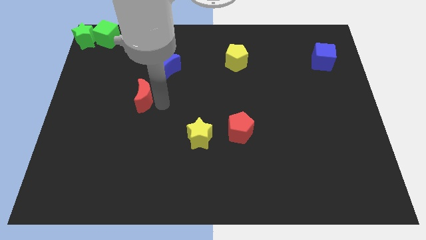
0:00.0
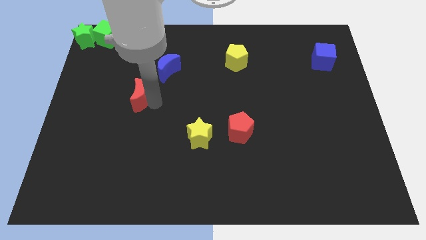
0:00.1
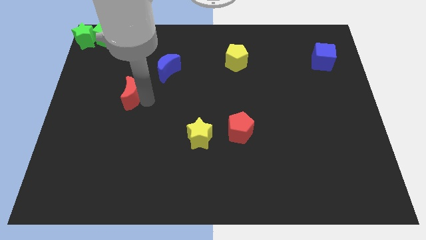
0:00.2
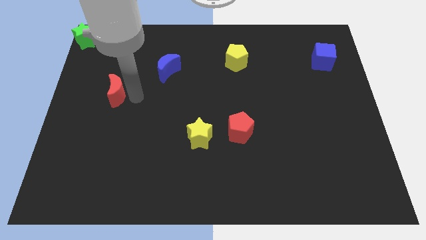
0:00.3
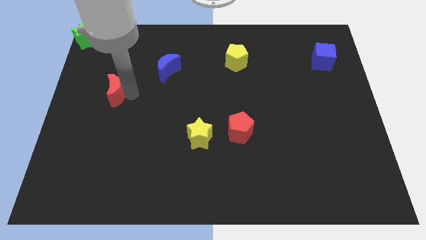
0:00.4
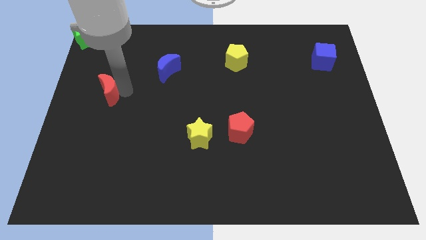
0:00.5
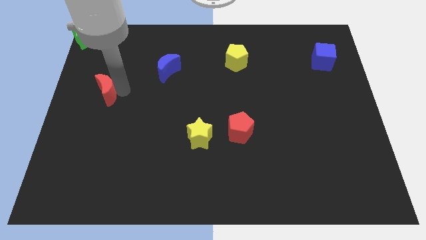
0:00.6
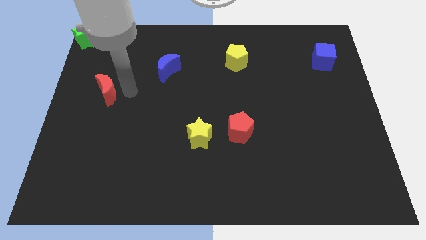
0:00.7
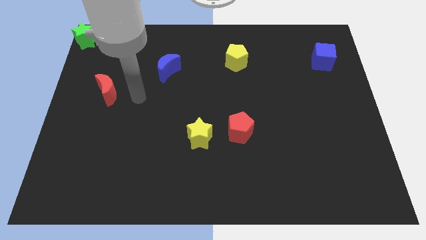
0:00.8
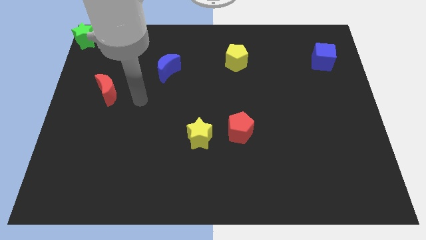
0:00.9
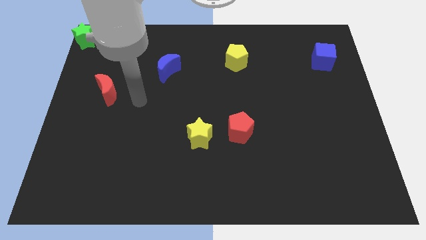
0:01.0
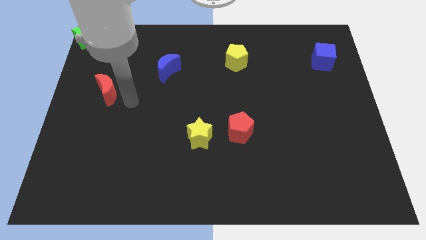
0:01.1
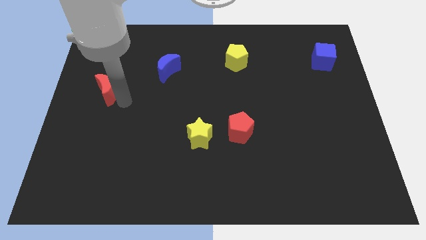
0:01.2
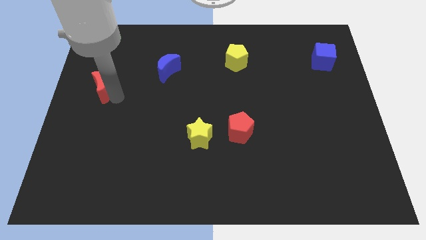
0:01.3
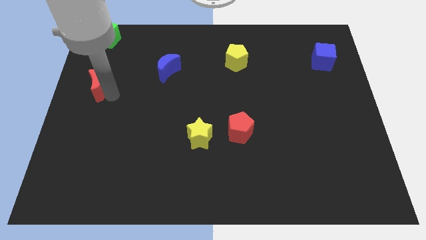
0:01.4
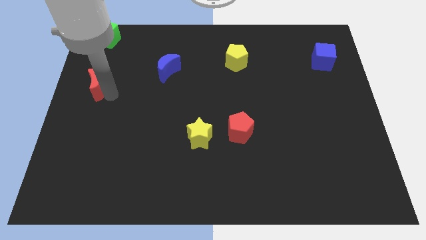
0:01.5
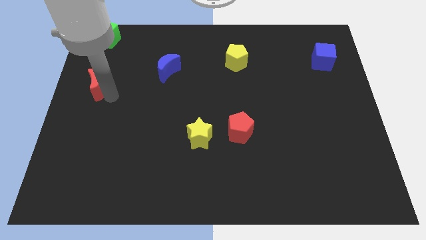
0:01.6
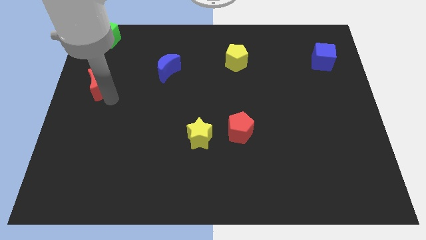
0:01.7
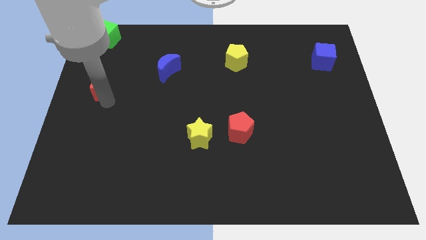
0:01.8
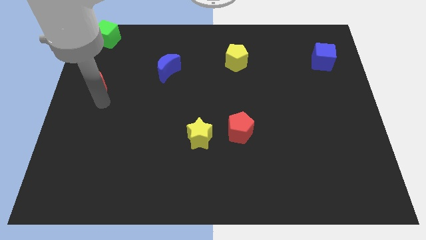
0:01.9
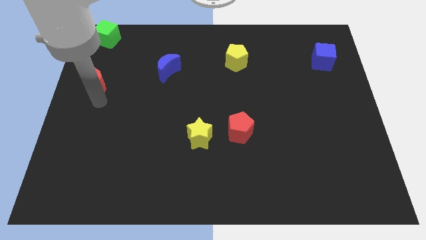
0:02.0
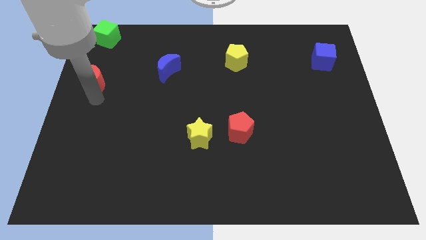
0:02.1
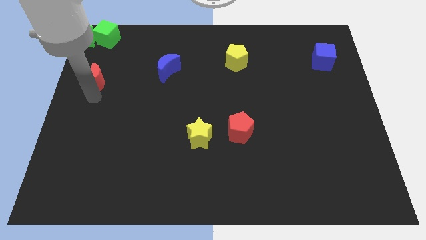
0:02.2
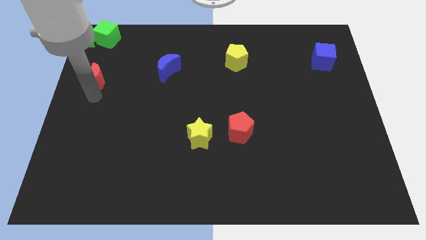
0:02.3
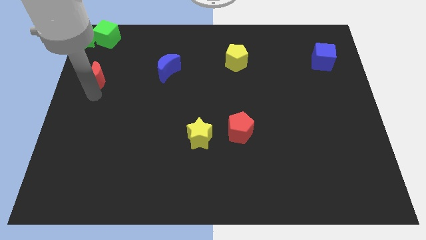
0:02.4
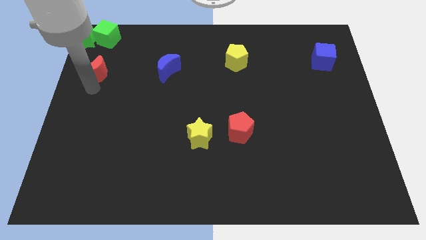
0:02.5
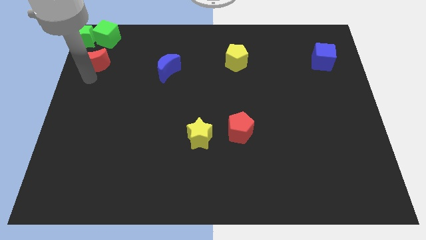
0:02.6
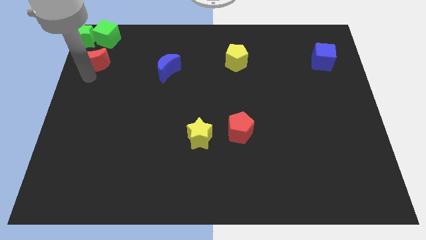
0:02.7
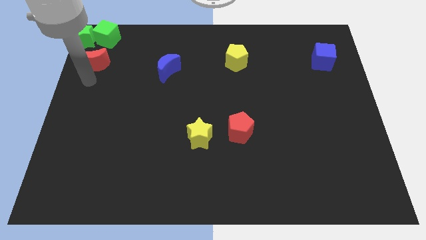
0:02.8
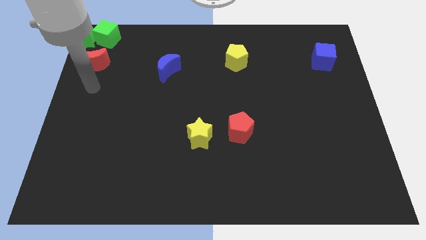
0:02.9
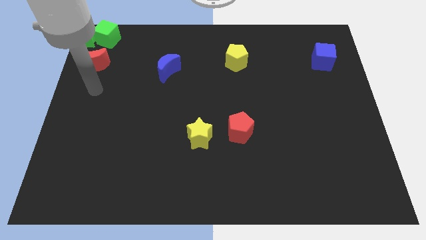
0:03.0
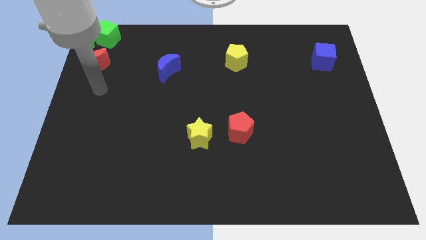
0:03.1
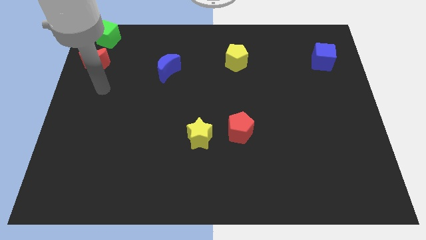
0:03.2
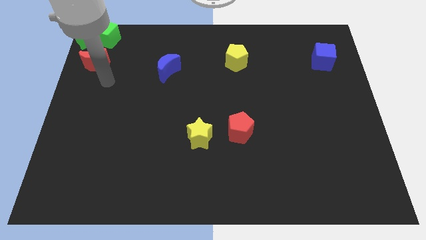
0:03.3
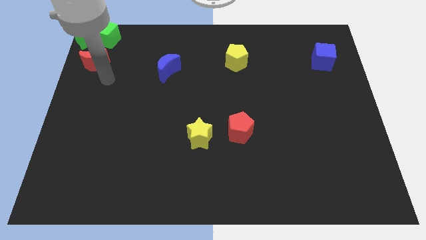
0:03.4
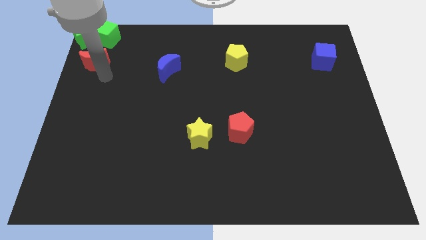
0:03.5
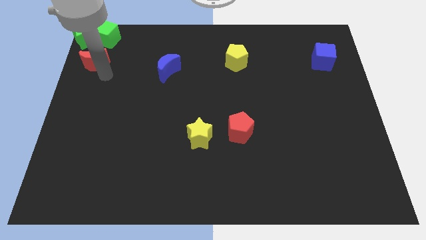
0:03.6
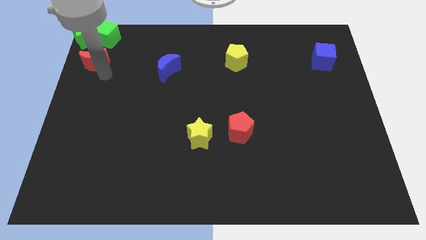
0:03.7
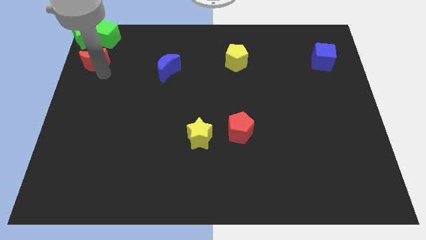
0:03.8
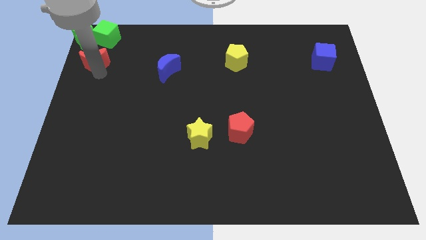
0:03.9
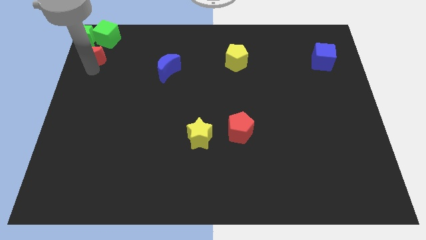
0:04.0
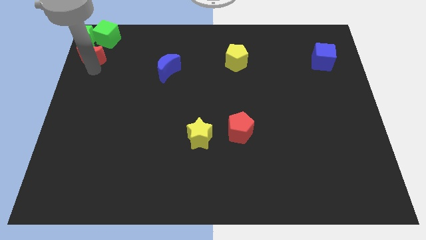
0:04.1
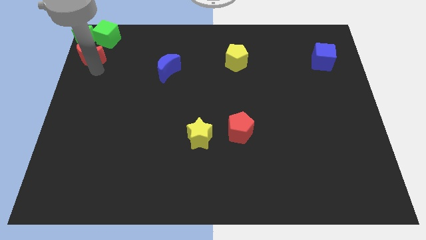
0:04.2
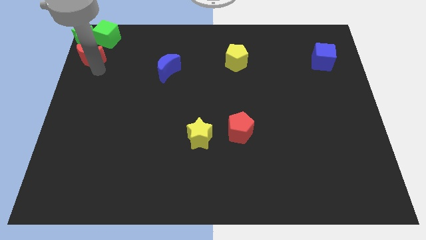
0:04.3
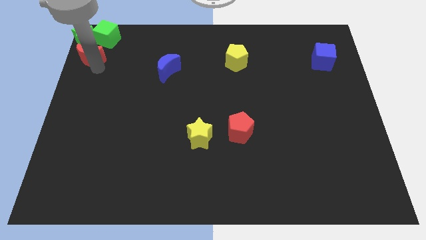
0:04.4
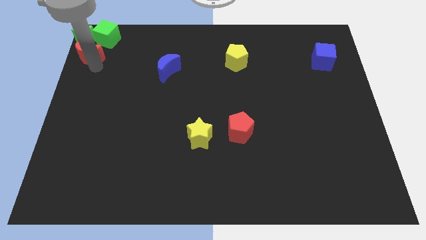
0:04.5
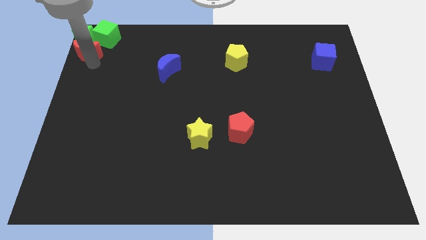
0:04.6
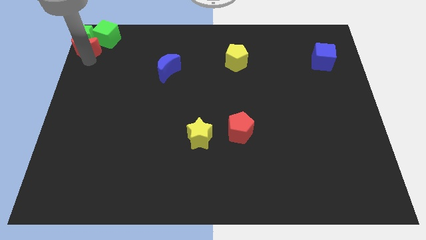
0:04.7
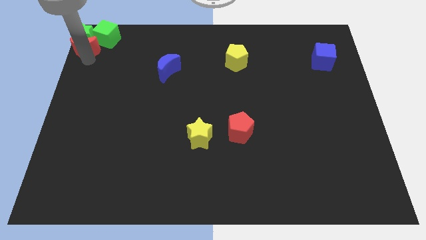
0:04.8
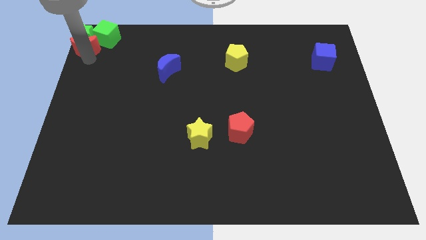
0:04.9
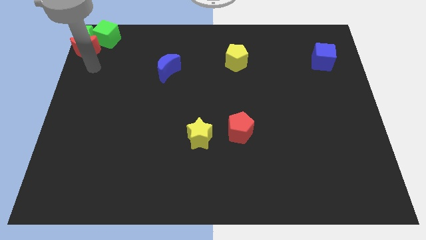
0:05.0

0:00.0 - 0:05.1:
place red moon to the top left corner of the board

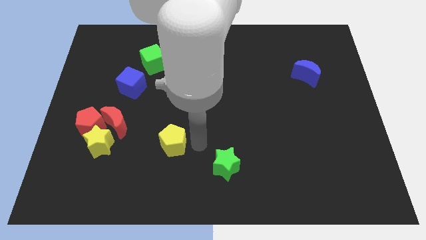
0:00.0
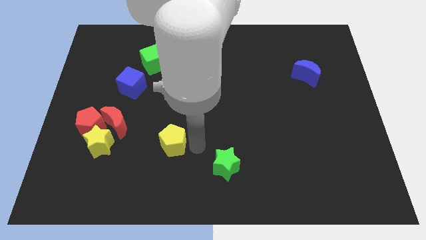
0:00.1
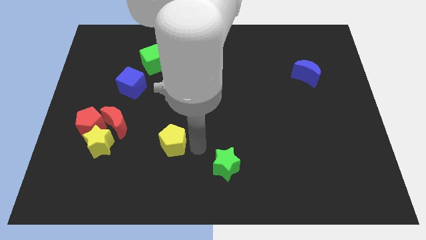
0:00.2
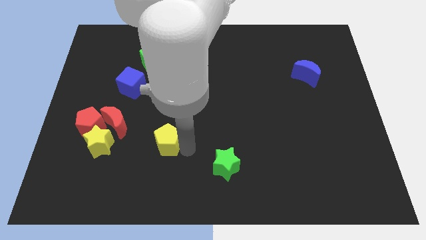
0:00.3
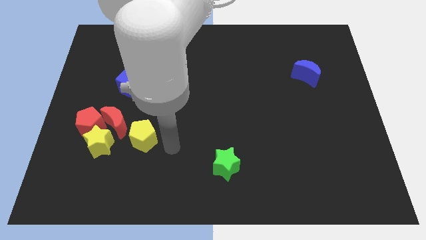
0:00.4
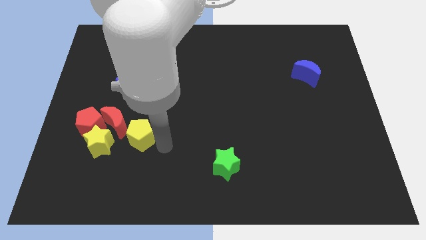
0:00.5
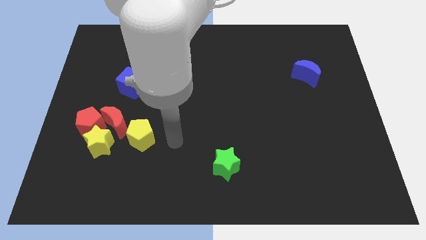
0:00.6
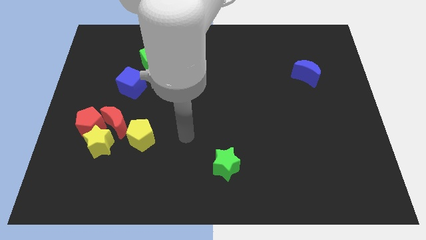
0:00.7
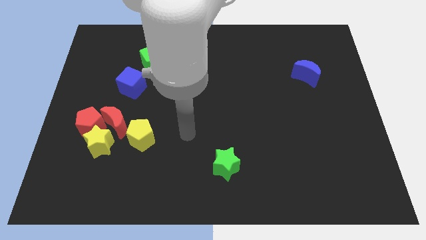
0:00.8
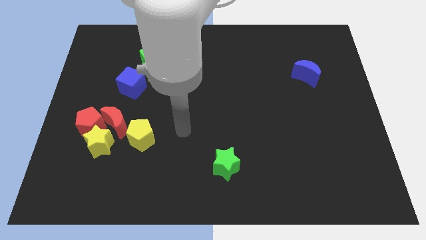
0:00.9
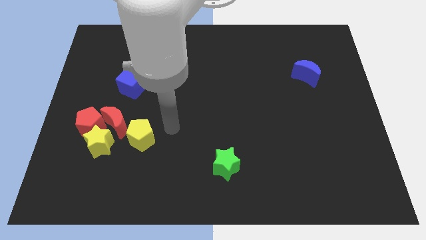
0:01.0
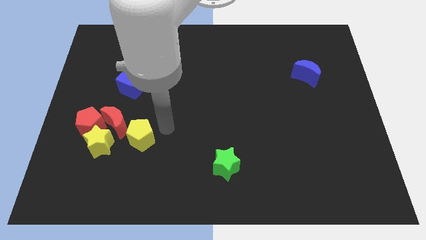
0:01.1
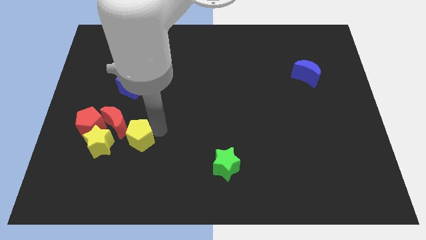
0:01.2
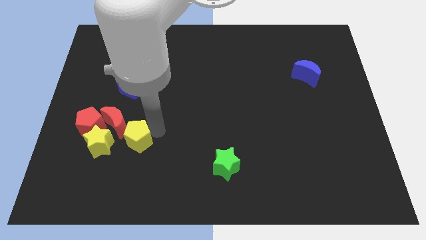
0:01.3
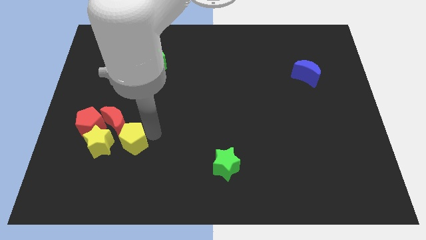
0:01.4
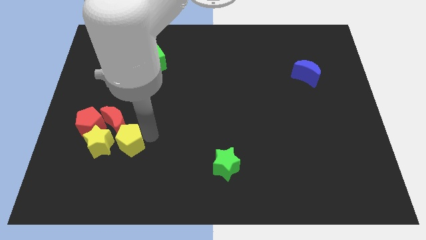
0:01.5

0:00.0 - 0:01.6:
push the yellow pentagon to the right of the yellow star

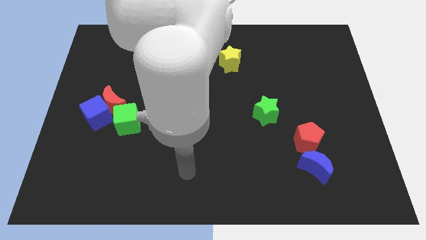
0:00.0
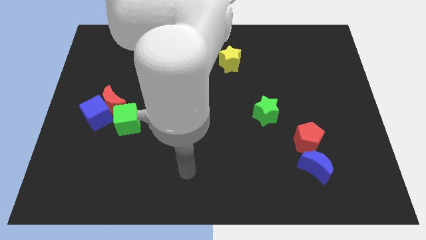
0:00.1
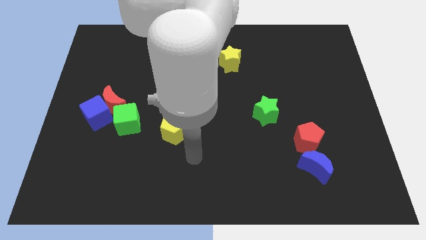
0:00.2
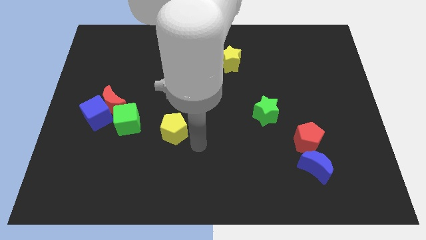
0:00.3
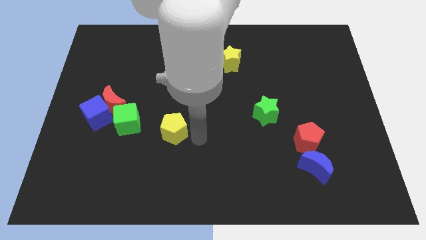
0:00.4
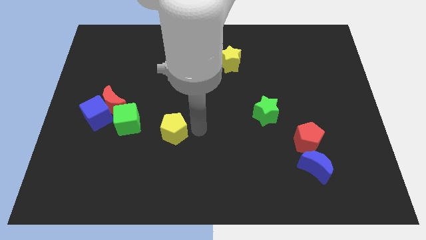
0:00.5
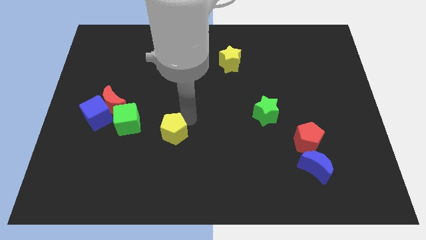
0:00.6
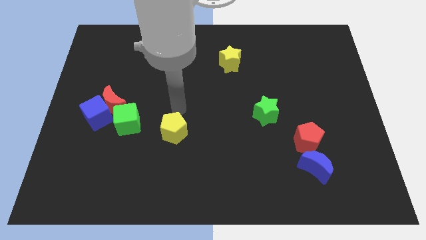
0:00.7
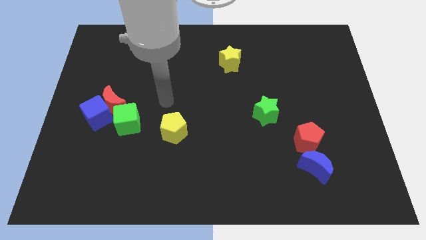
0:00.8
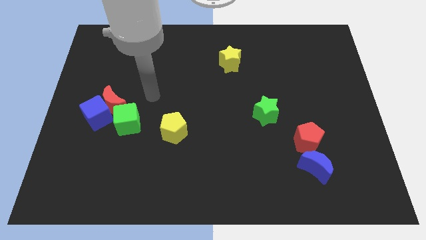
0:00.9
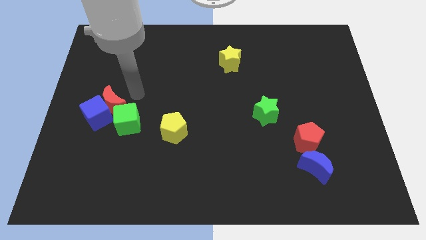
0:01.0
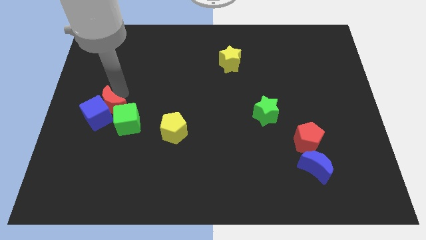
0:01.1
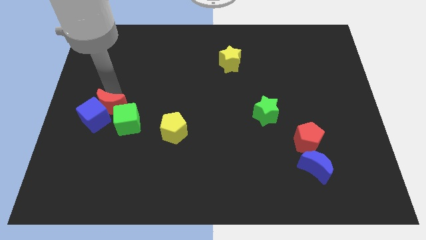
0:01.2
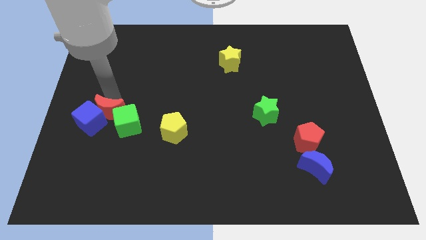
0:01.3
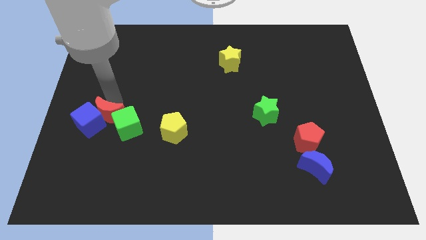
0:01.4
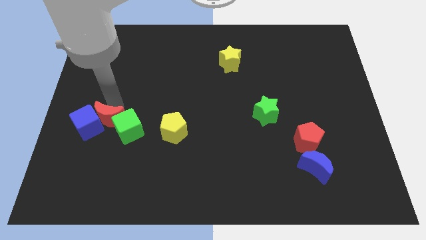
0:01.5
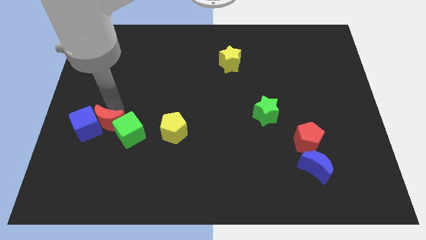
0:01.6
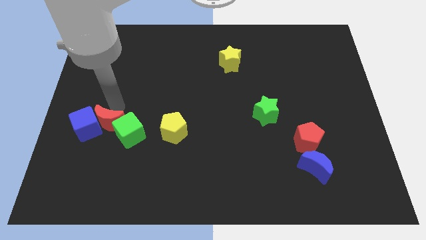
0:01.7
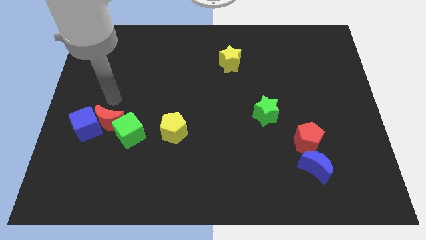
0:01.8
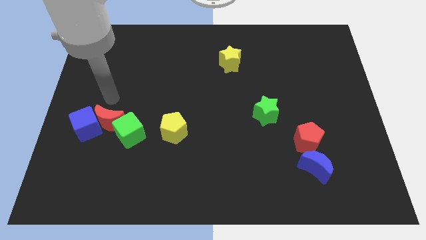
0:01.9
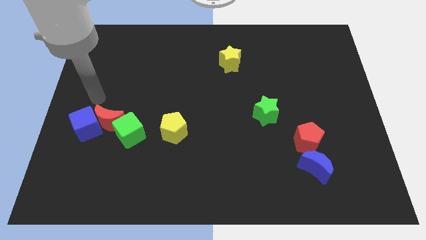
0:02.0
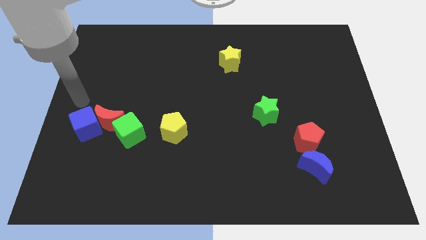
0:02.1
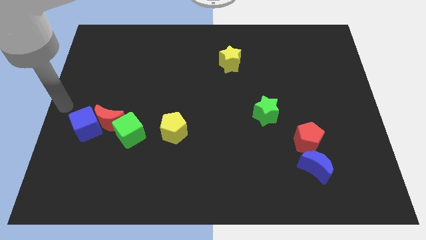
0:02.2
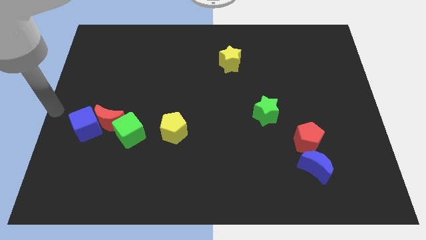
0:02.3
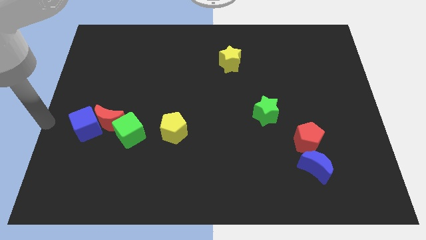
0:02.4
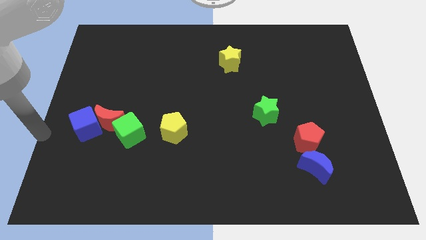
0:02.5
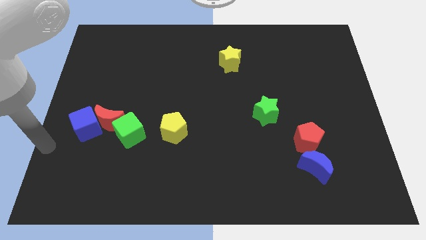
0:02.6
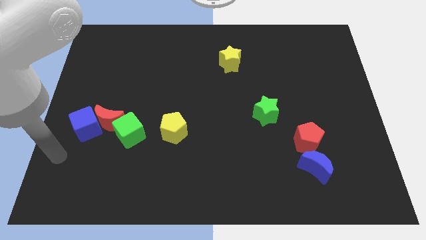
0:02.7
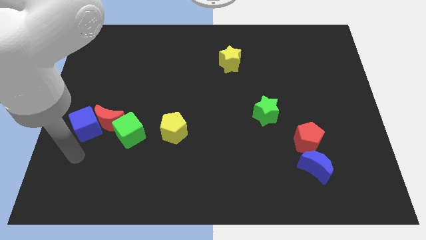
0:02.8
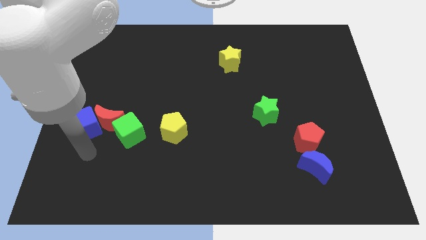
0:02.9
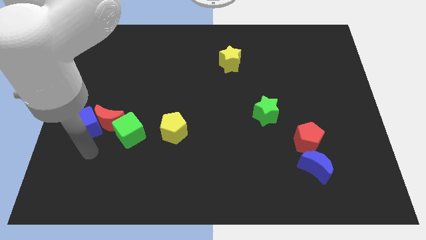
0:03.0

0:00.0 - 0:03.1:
move the red moonblue cube and green cube slightly towards the bottom side
